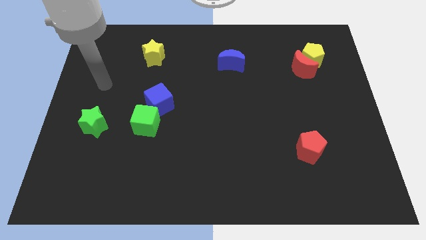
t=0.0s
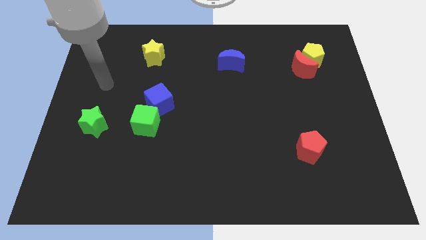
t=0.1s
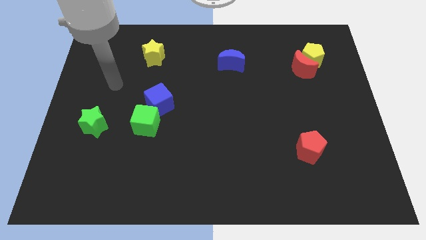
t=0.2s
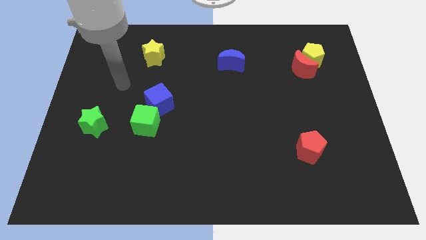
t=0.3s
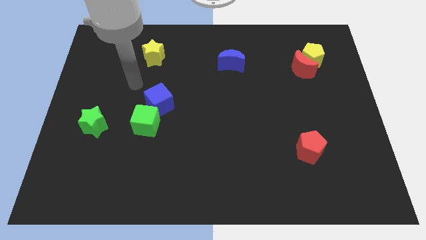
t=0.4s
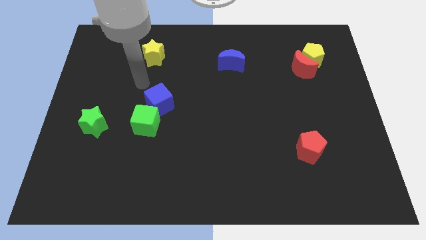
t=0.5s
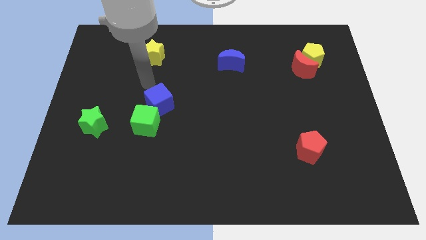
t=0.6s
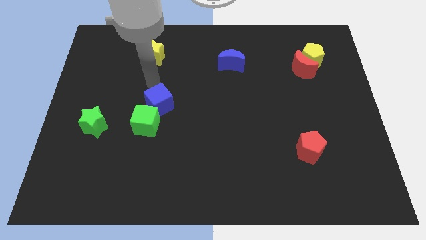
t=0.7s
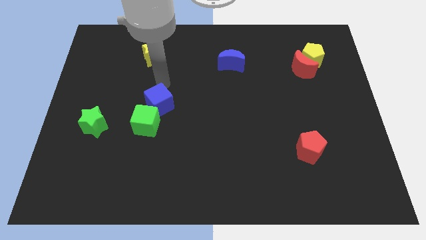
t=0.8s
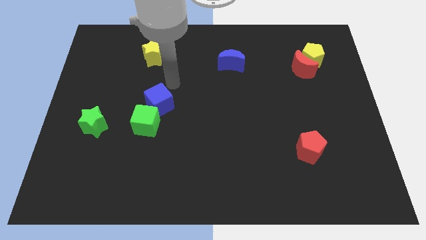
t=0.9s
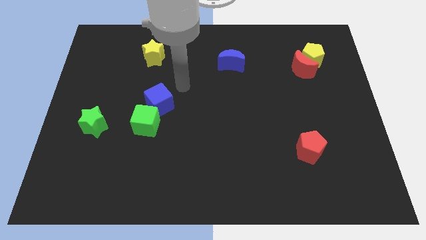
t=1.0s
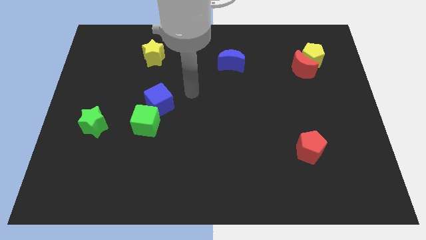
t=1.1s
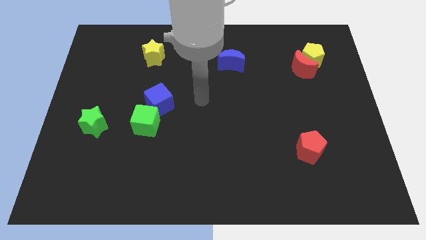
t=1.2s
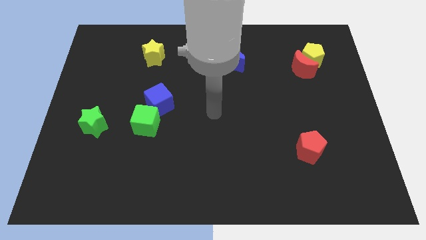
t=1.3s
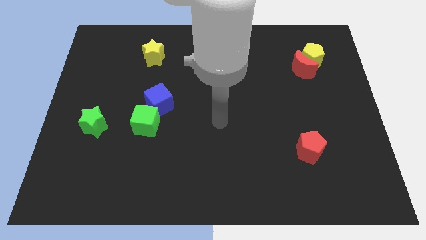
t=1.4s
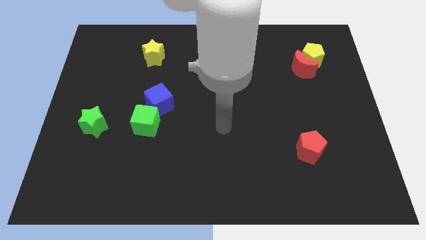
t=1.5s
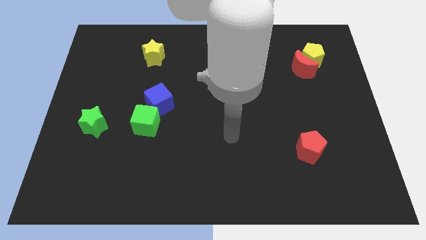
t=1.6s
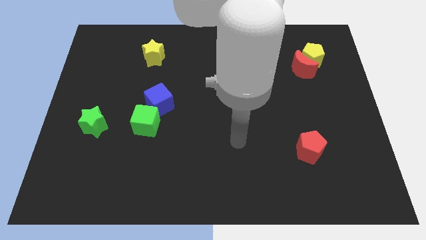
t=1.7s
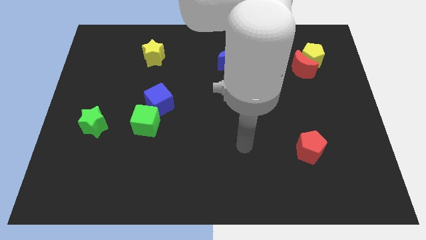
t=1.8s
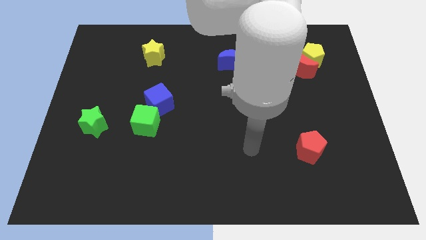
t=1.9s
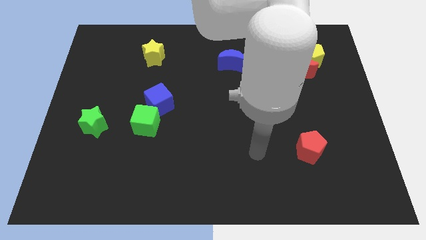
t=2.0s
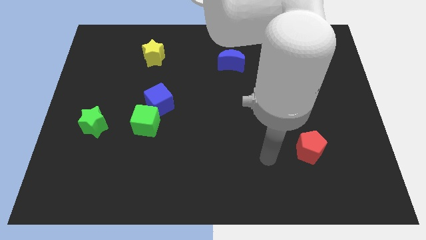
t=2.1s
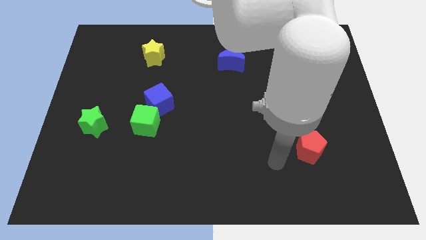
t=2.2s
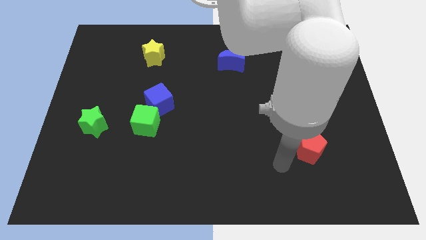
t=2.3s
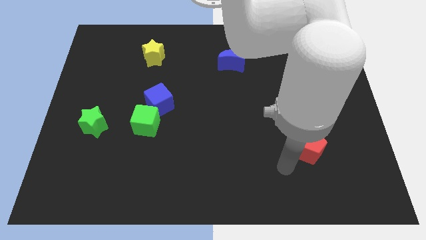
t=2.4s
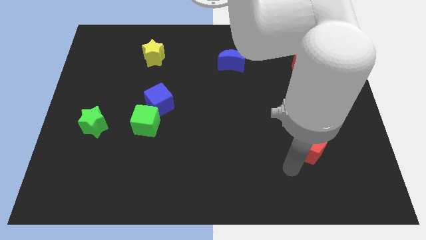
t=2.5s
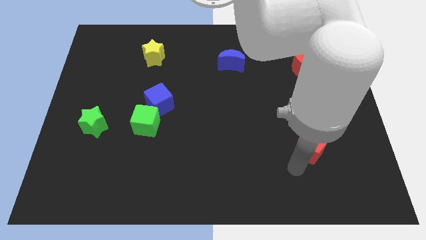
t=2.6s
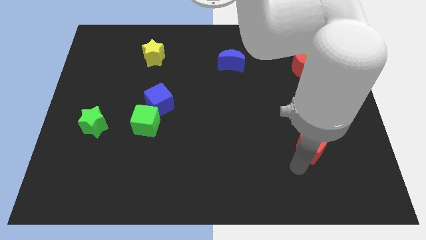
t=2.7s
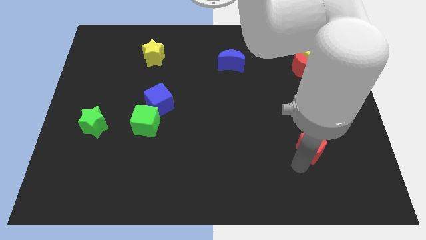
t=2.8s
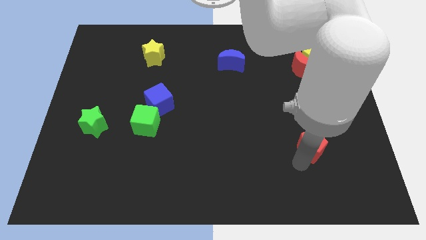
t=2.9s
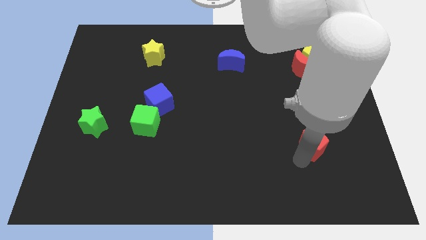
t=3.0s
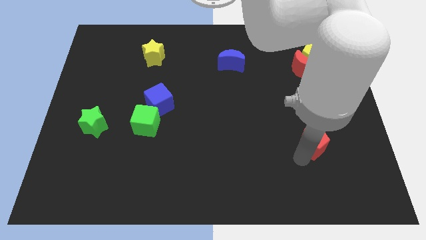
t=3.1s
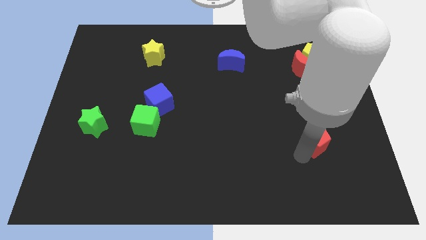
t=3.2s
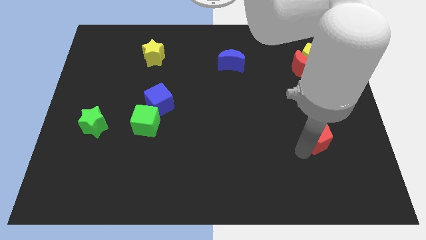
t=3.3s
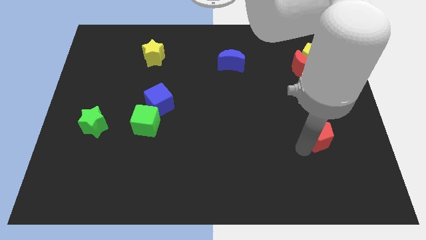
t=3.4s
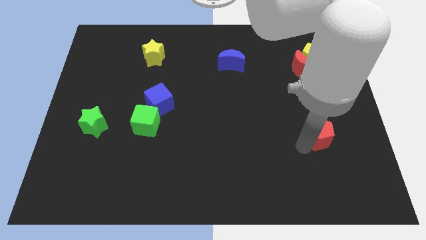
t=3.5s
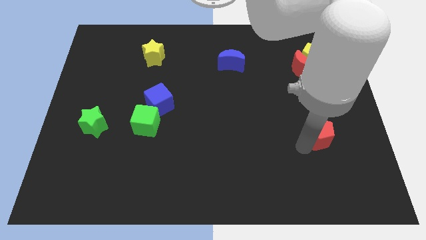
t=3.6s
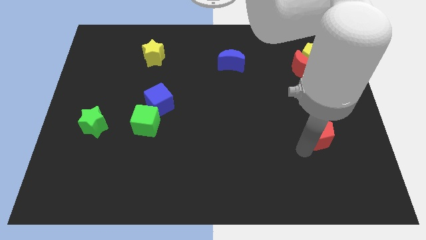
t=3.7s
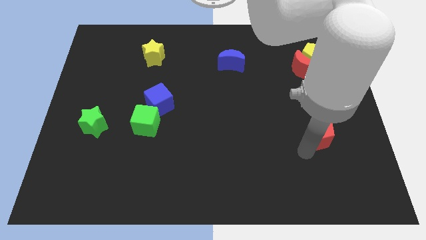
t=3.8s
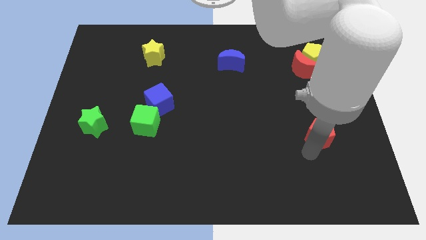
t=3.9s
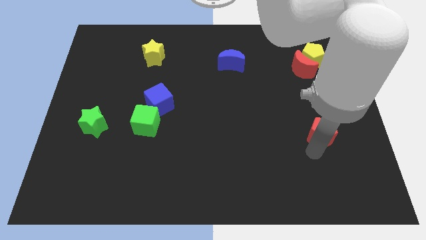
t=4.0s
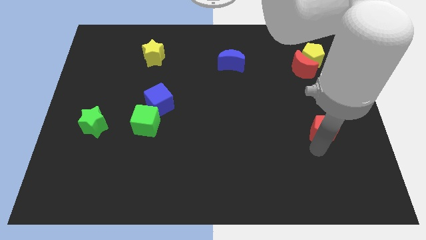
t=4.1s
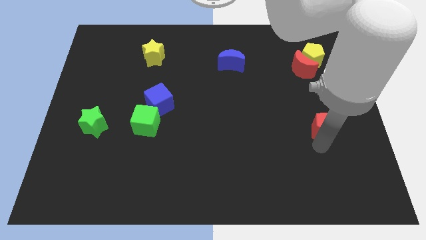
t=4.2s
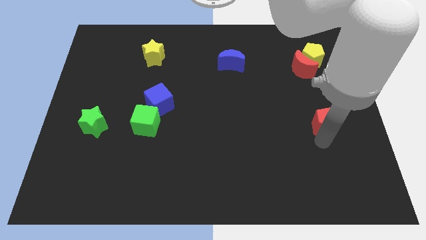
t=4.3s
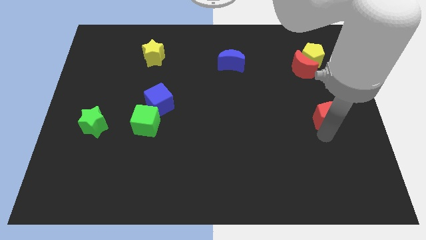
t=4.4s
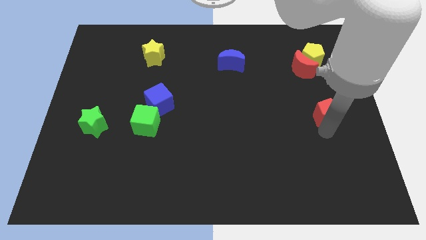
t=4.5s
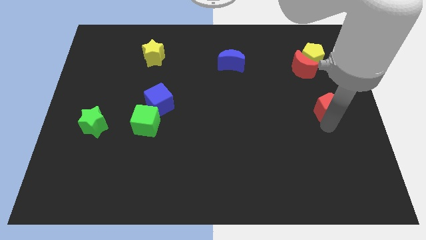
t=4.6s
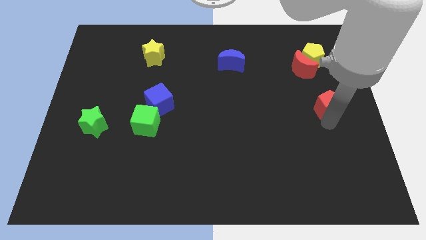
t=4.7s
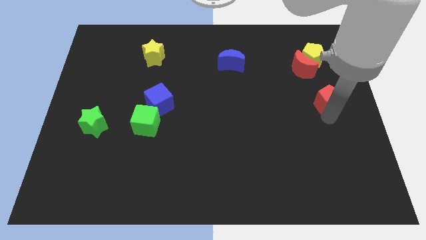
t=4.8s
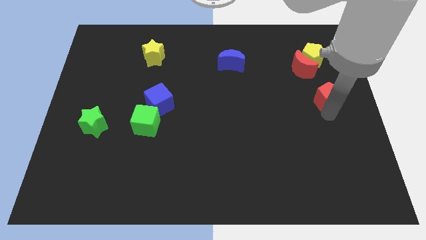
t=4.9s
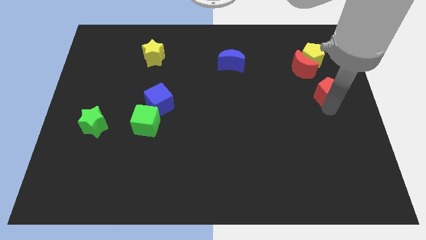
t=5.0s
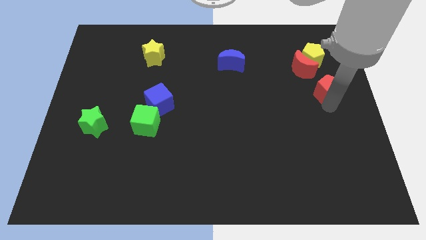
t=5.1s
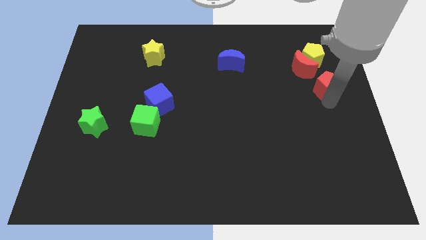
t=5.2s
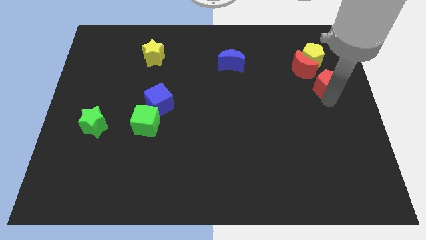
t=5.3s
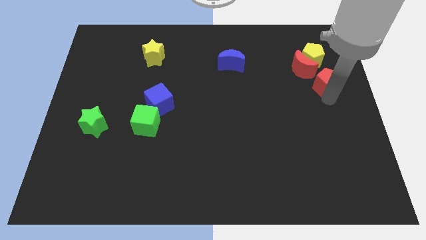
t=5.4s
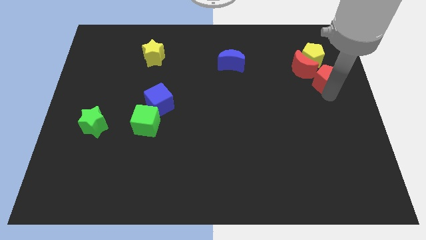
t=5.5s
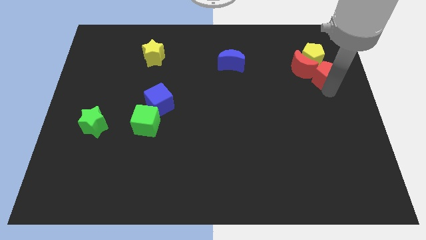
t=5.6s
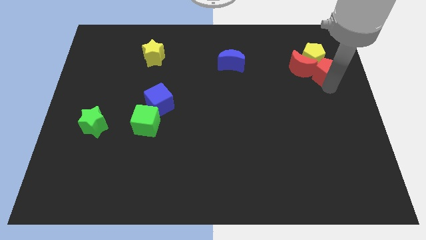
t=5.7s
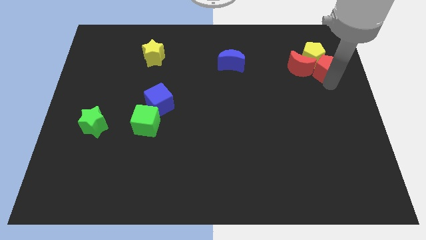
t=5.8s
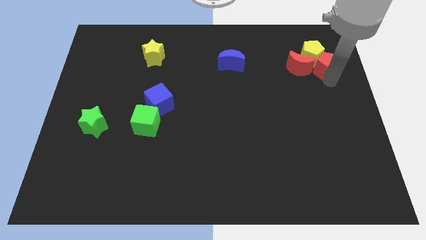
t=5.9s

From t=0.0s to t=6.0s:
slide the red pentagon to the yellow pentagon

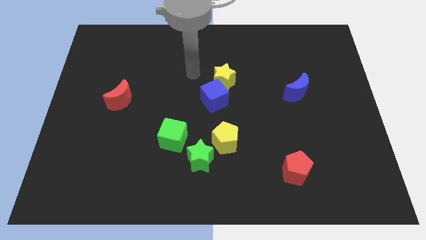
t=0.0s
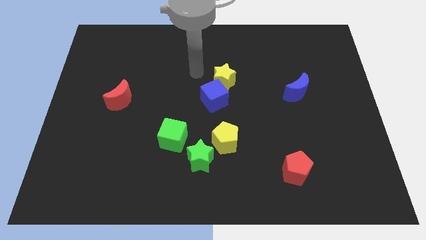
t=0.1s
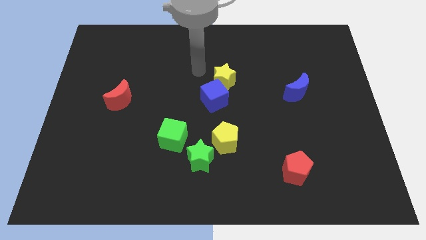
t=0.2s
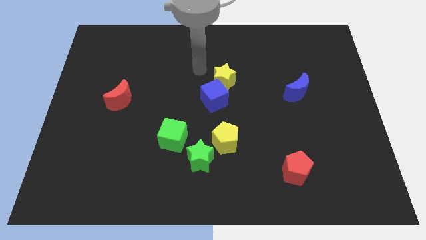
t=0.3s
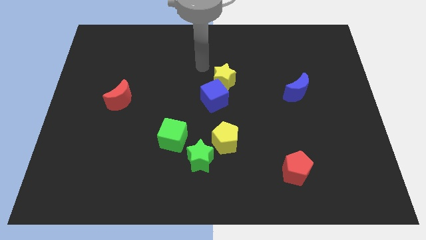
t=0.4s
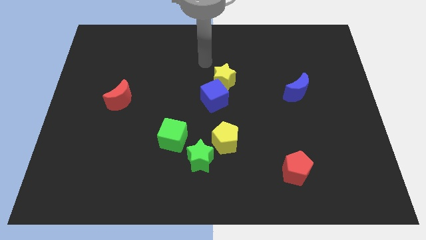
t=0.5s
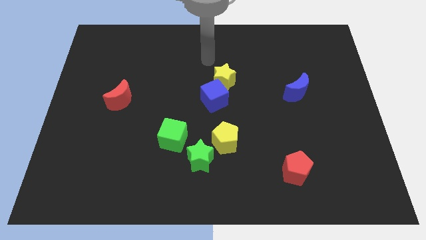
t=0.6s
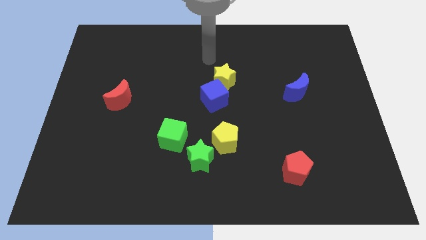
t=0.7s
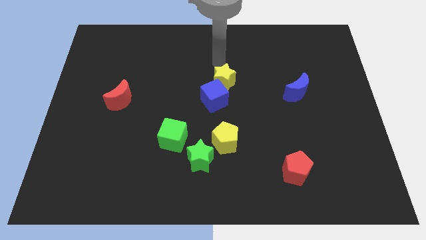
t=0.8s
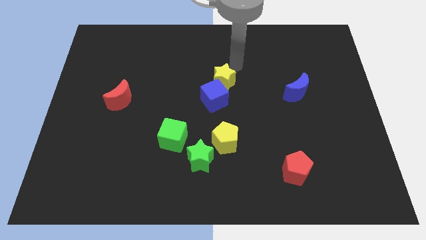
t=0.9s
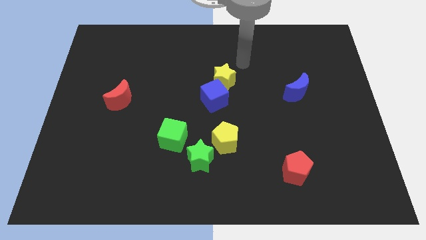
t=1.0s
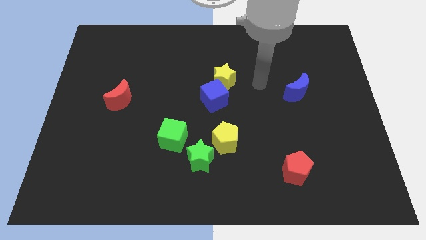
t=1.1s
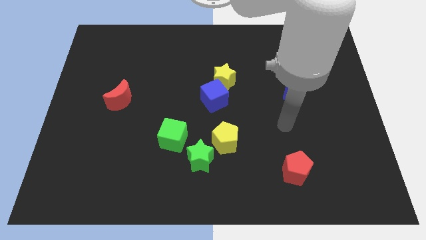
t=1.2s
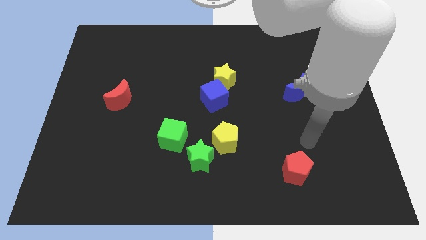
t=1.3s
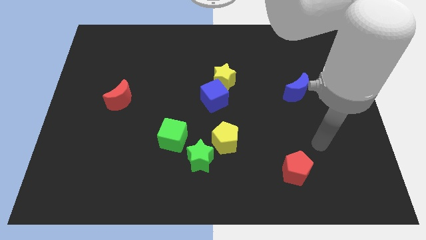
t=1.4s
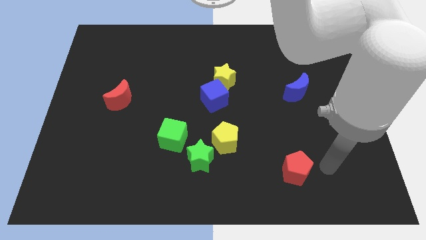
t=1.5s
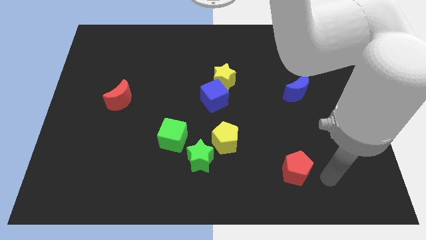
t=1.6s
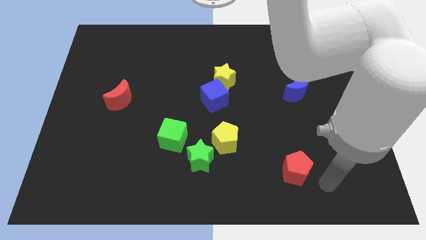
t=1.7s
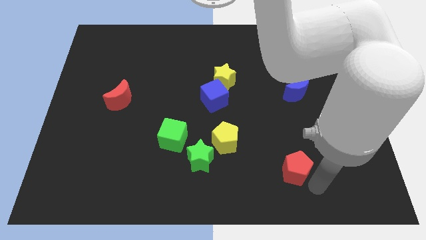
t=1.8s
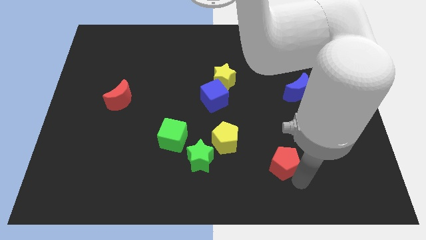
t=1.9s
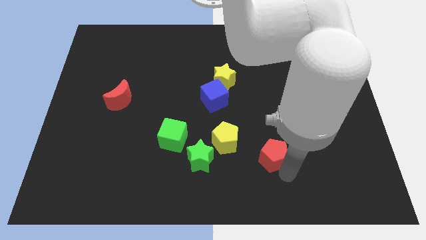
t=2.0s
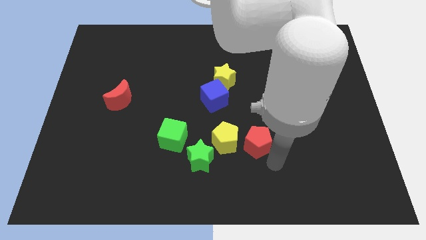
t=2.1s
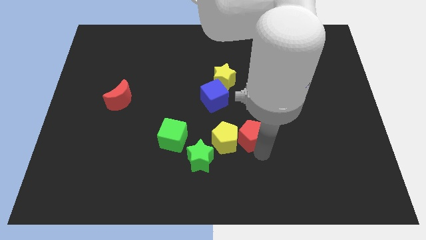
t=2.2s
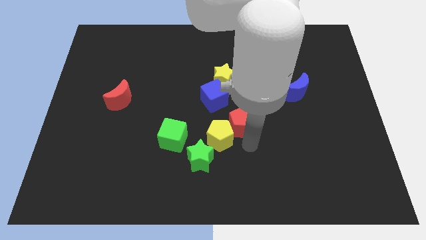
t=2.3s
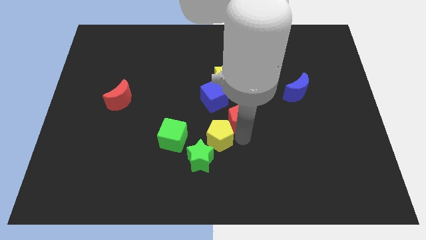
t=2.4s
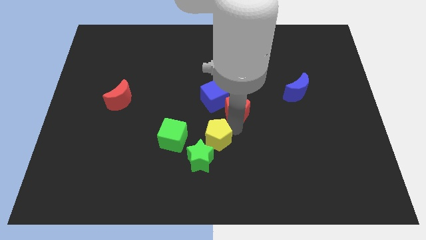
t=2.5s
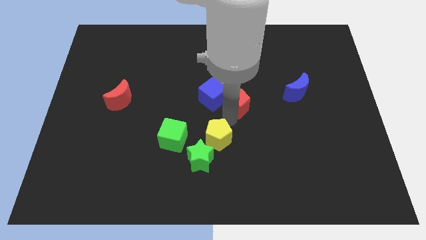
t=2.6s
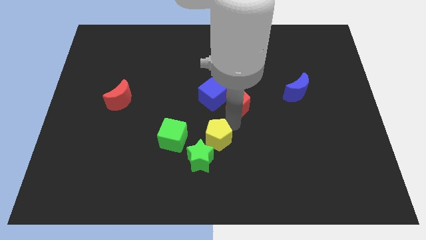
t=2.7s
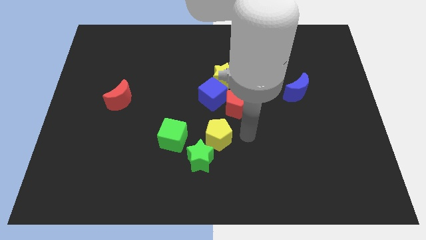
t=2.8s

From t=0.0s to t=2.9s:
push the red pentagon towards the blue cube
